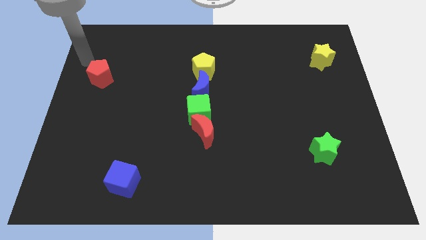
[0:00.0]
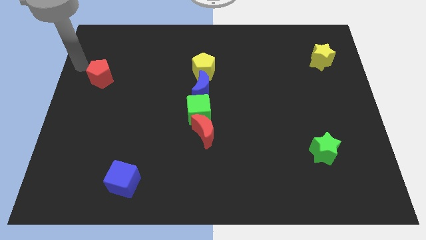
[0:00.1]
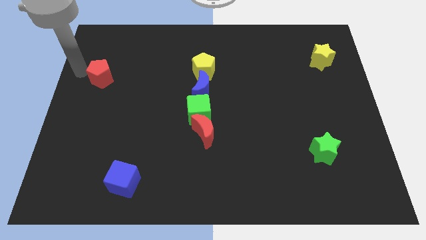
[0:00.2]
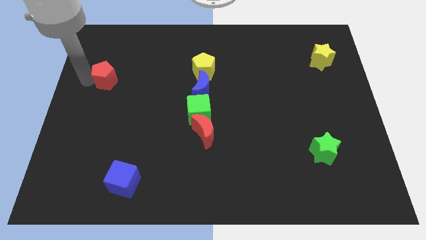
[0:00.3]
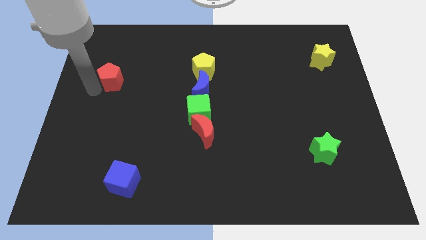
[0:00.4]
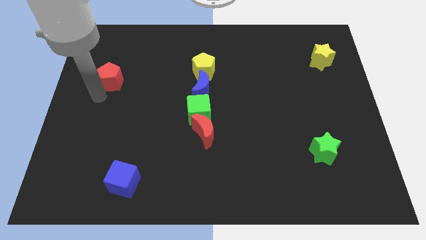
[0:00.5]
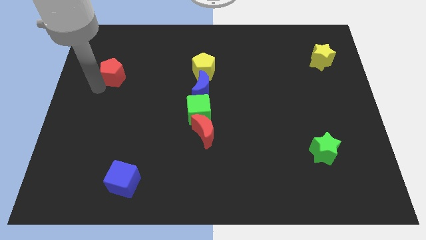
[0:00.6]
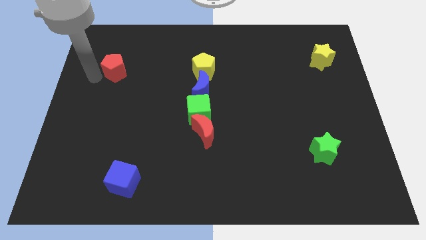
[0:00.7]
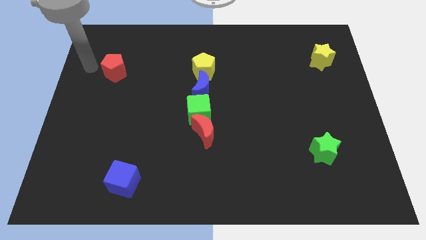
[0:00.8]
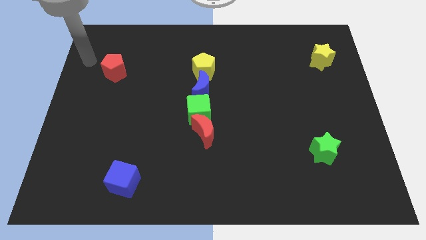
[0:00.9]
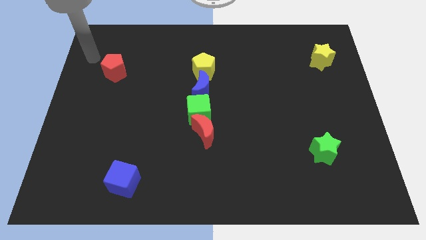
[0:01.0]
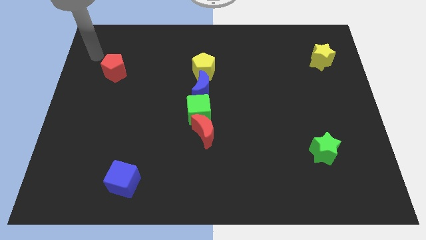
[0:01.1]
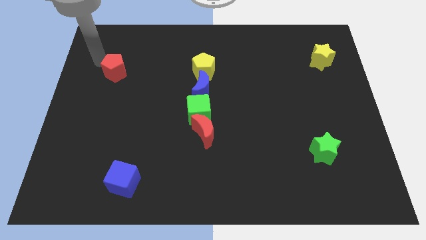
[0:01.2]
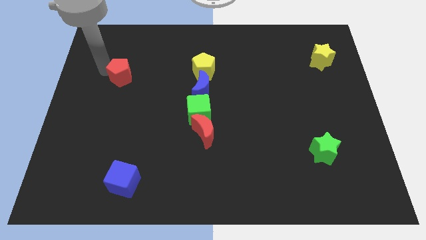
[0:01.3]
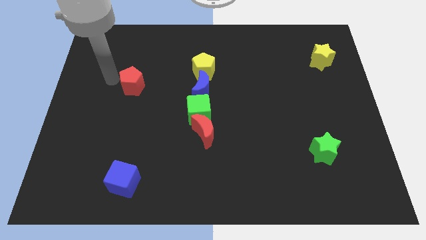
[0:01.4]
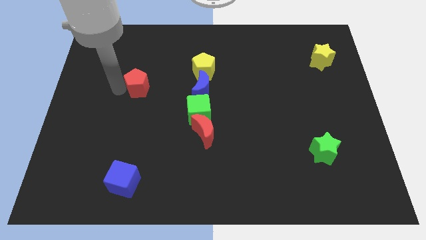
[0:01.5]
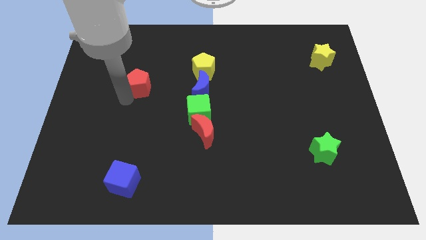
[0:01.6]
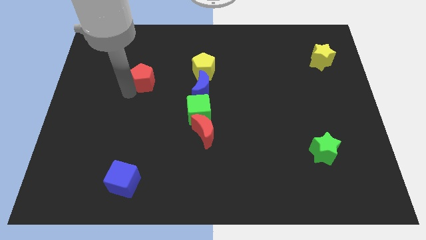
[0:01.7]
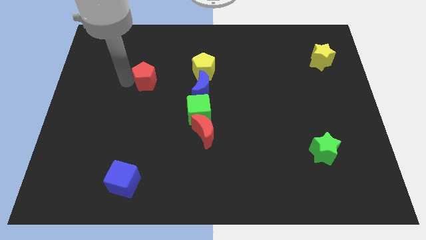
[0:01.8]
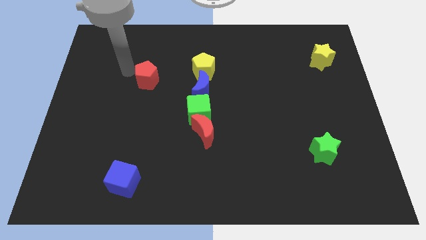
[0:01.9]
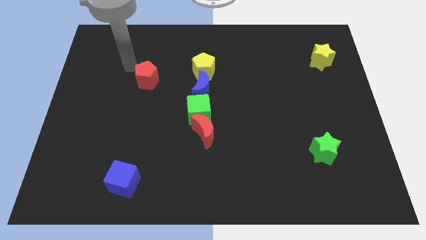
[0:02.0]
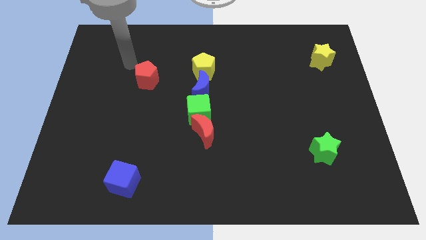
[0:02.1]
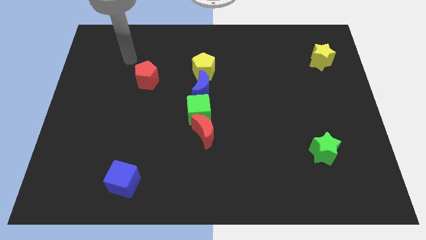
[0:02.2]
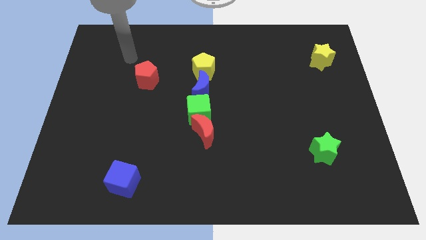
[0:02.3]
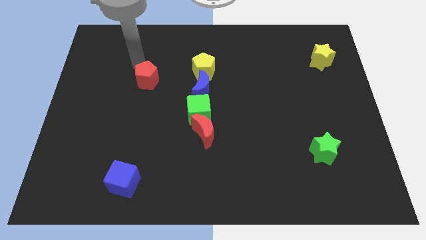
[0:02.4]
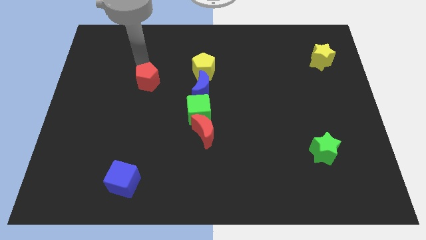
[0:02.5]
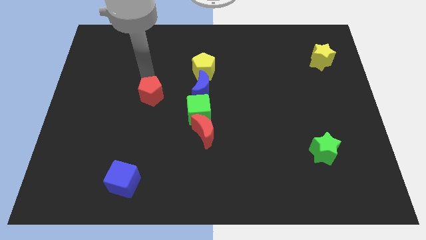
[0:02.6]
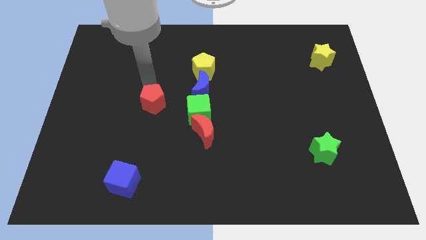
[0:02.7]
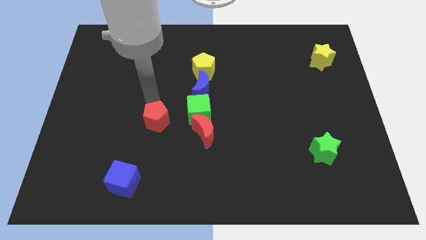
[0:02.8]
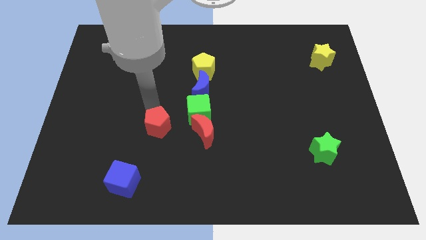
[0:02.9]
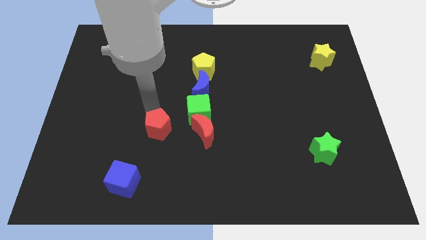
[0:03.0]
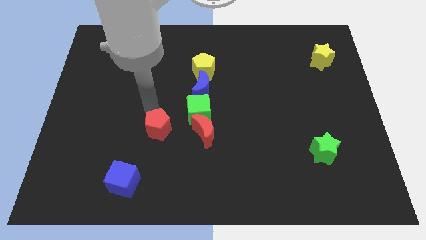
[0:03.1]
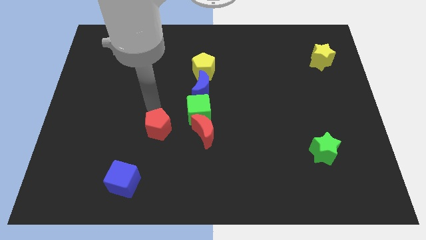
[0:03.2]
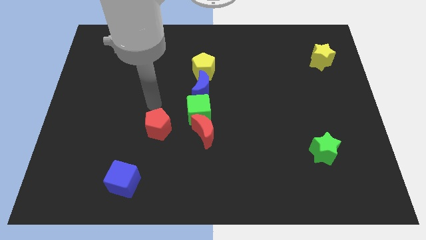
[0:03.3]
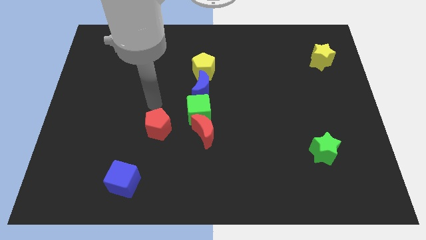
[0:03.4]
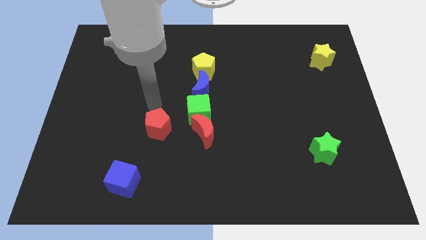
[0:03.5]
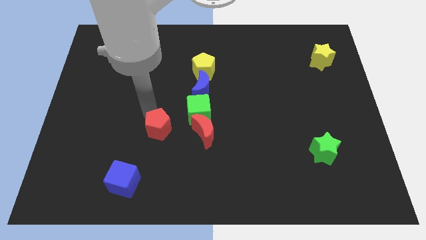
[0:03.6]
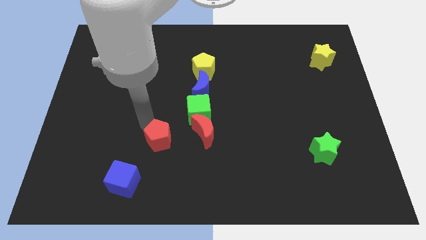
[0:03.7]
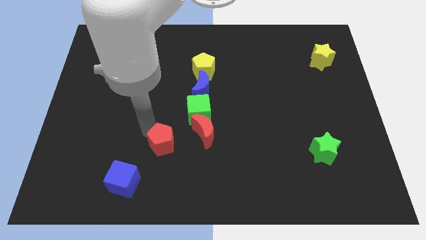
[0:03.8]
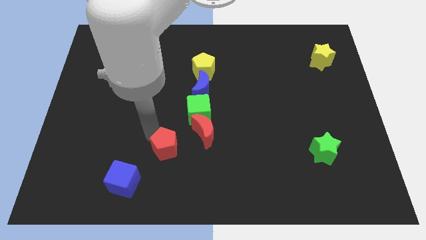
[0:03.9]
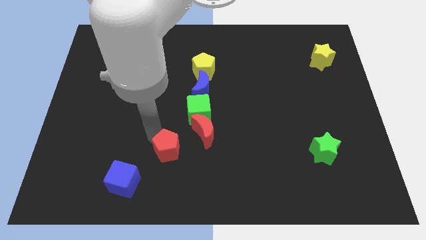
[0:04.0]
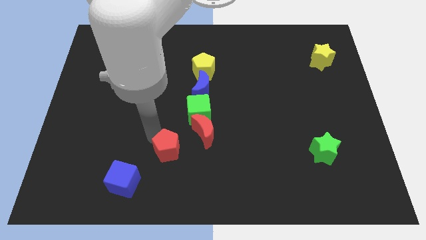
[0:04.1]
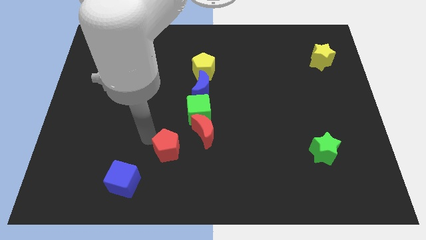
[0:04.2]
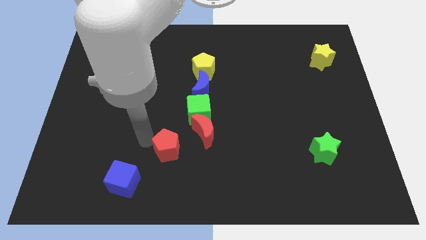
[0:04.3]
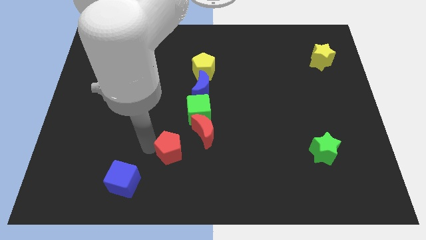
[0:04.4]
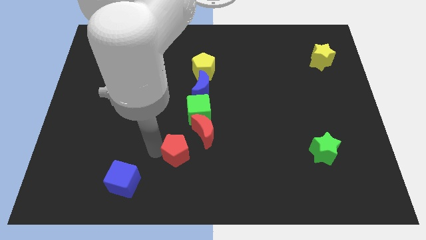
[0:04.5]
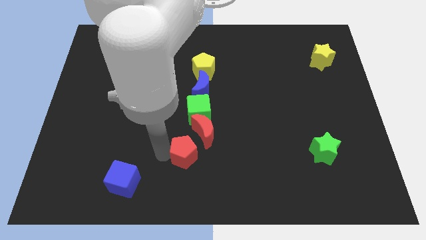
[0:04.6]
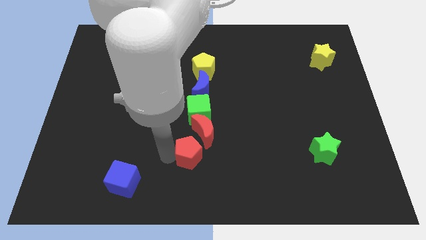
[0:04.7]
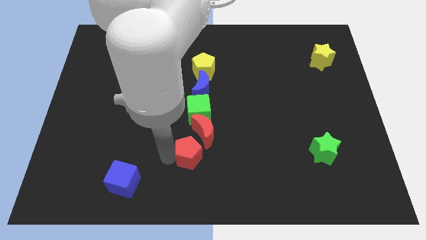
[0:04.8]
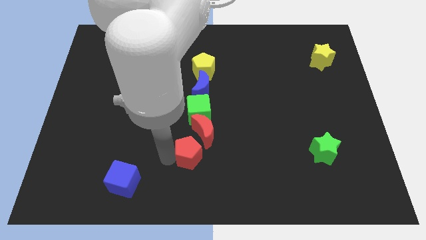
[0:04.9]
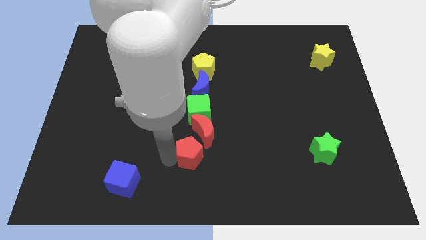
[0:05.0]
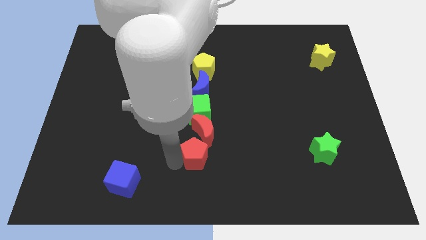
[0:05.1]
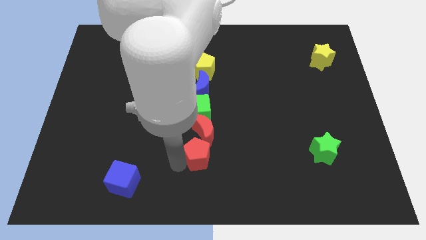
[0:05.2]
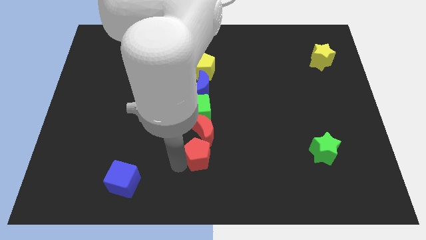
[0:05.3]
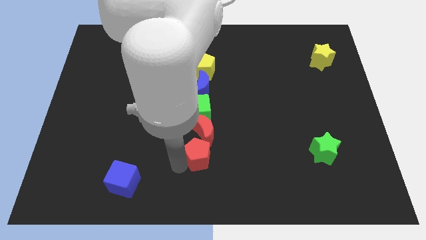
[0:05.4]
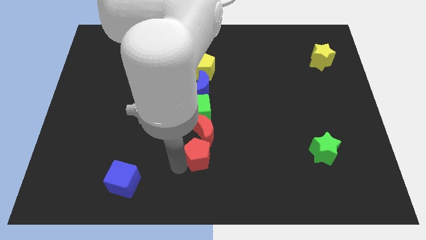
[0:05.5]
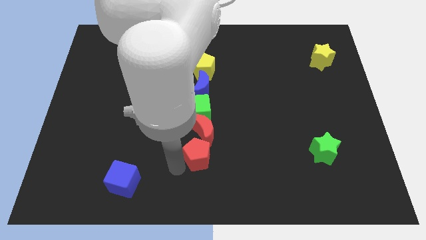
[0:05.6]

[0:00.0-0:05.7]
place the red pentagon to the bottom of red crescent

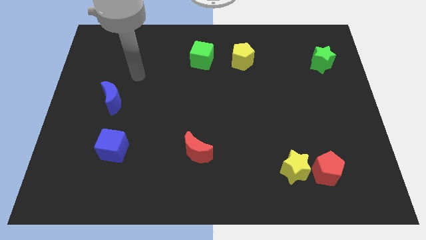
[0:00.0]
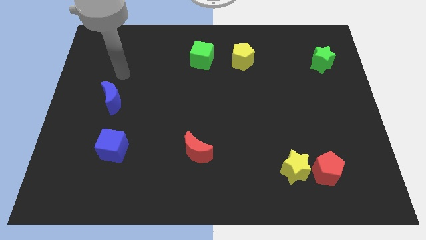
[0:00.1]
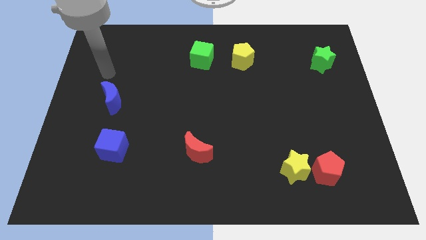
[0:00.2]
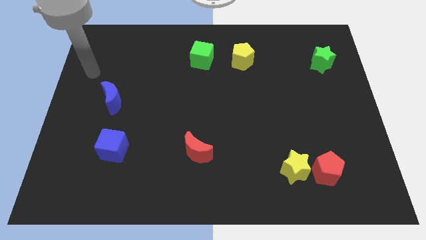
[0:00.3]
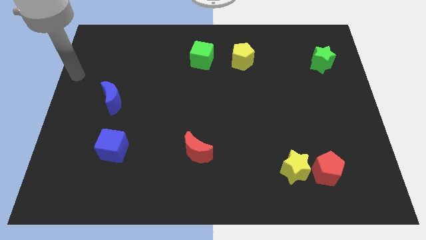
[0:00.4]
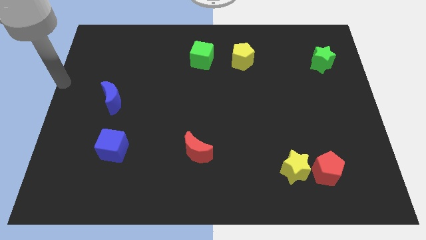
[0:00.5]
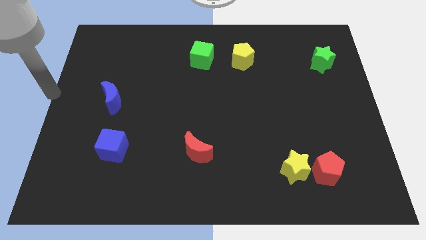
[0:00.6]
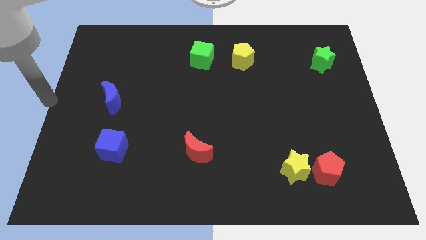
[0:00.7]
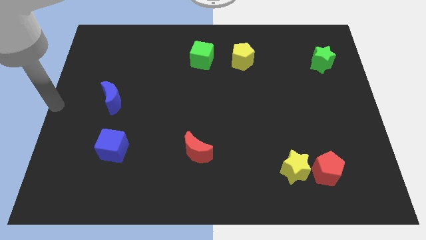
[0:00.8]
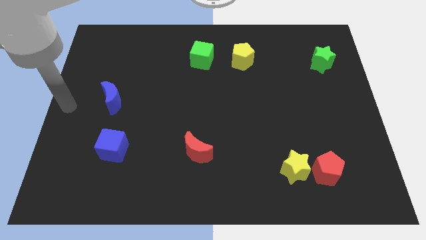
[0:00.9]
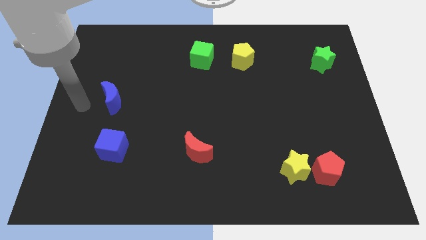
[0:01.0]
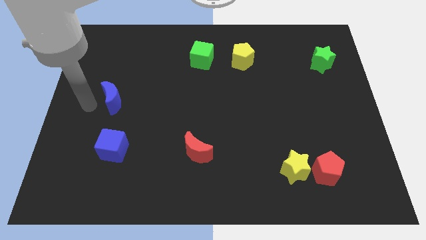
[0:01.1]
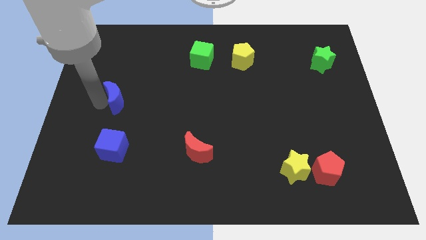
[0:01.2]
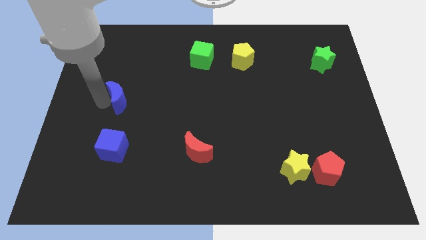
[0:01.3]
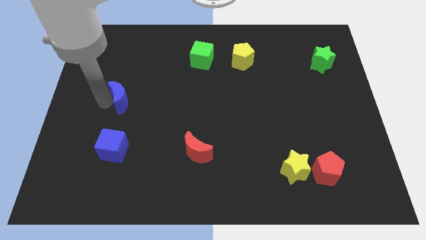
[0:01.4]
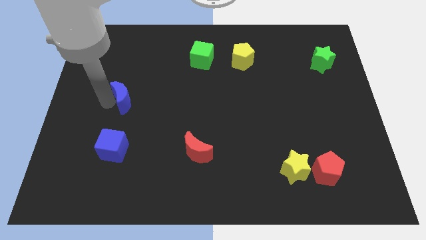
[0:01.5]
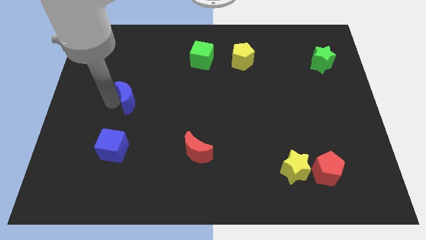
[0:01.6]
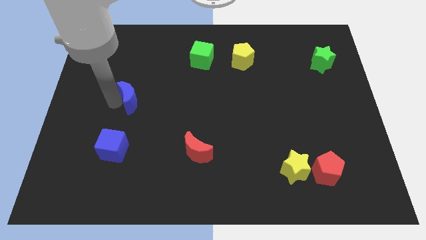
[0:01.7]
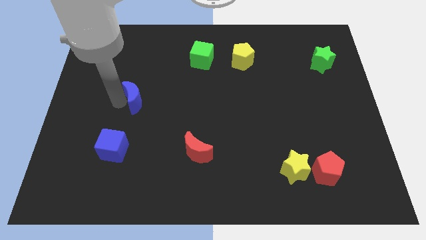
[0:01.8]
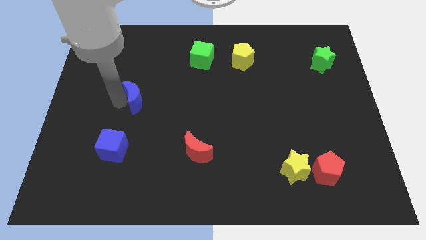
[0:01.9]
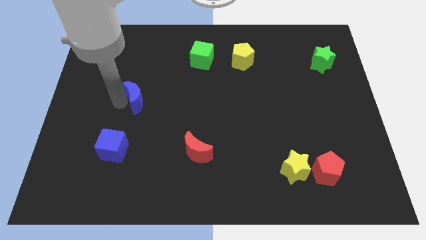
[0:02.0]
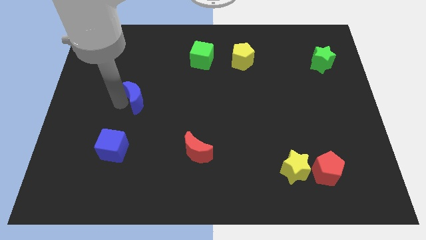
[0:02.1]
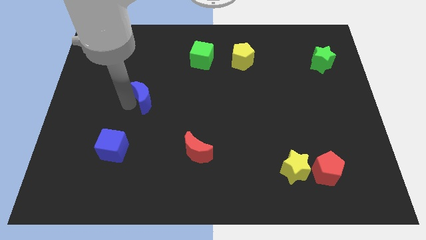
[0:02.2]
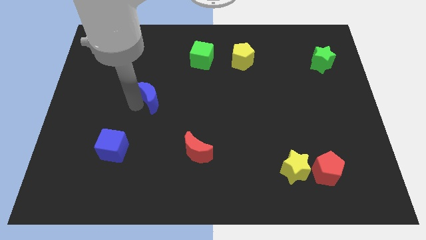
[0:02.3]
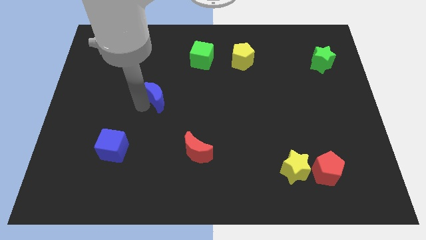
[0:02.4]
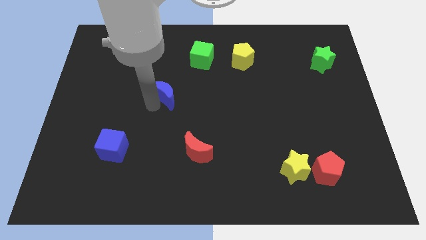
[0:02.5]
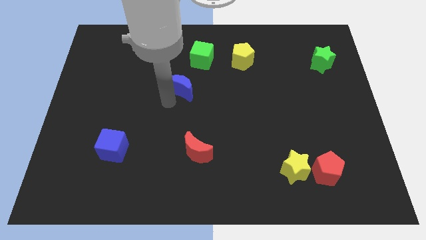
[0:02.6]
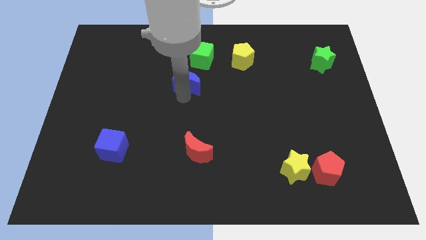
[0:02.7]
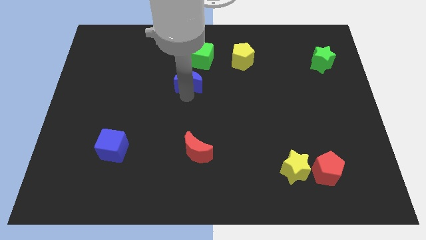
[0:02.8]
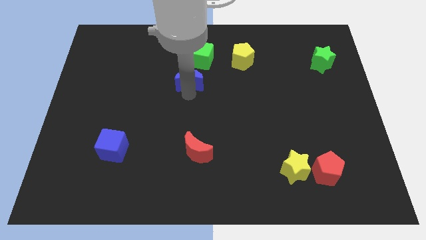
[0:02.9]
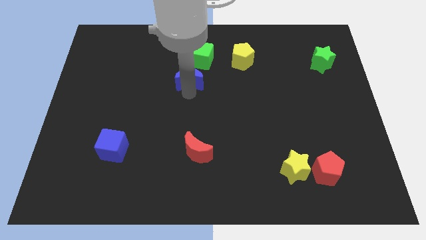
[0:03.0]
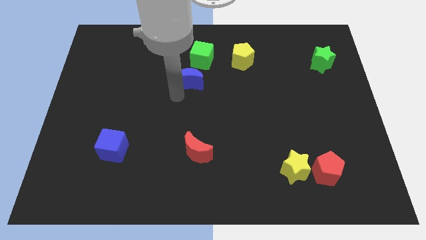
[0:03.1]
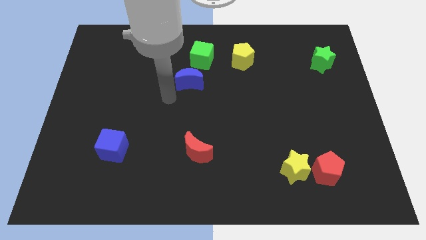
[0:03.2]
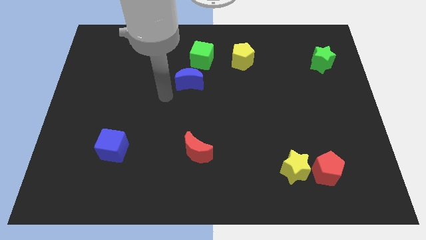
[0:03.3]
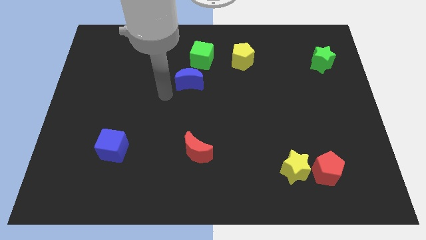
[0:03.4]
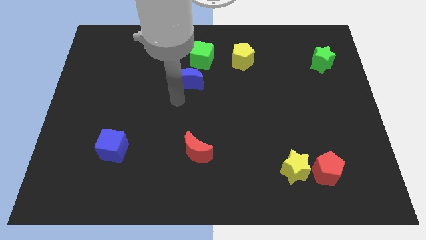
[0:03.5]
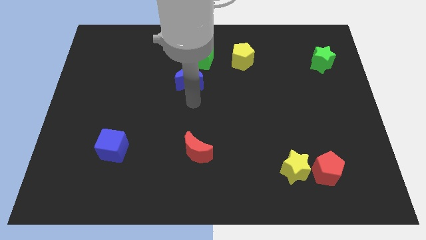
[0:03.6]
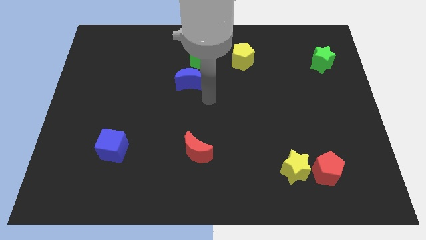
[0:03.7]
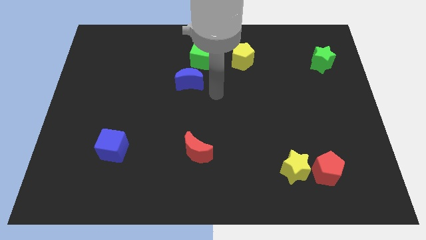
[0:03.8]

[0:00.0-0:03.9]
push the blue moon to the bottom side of the green cube
